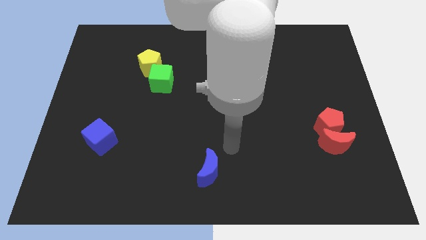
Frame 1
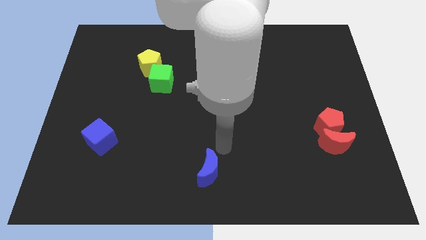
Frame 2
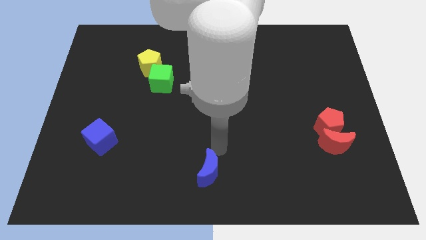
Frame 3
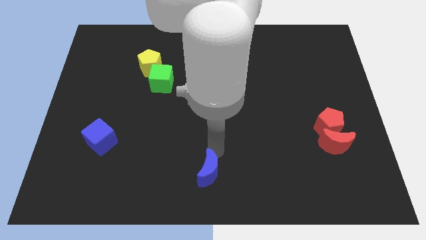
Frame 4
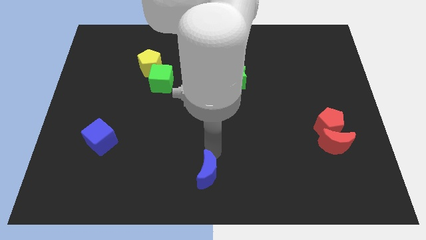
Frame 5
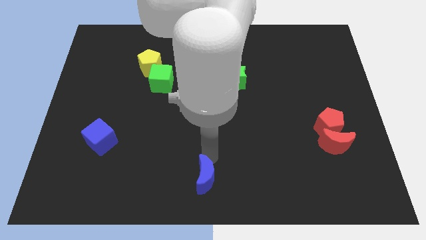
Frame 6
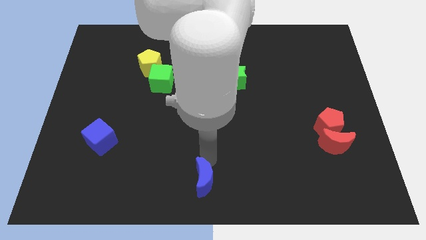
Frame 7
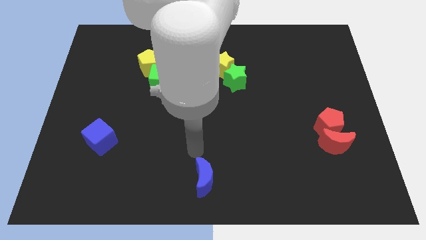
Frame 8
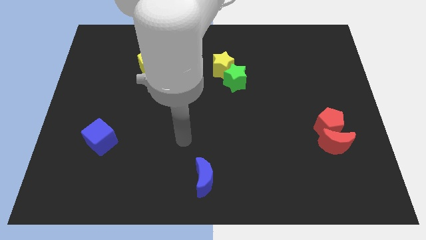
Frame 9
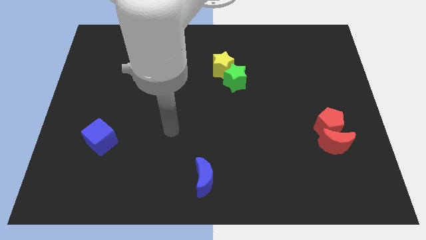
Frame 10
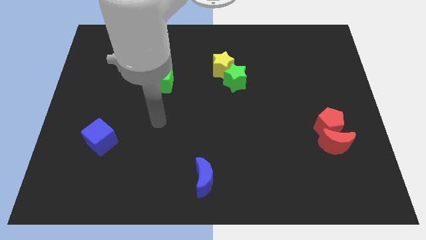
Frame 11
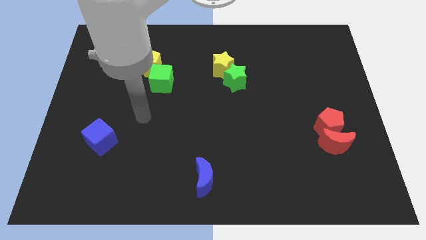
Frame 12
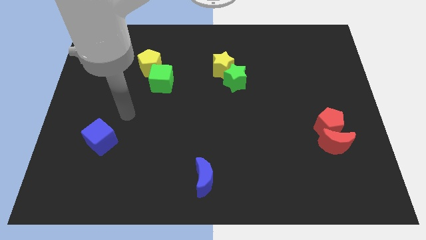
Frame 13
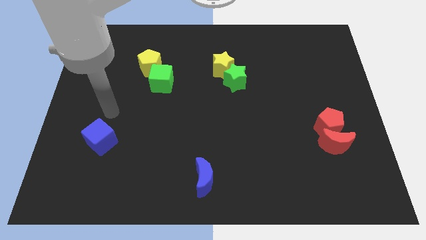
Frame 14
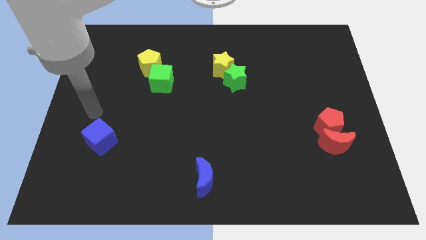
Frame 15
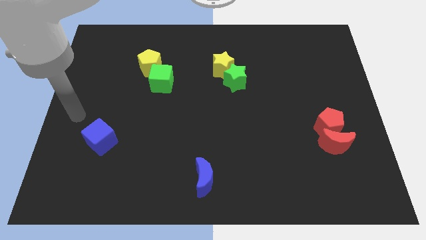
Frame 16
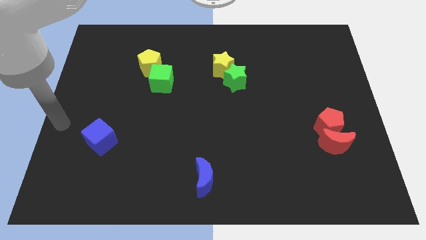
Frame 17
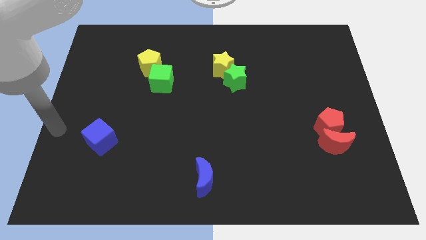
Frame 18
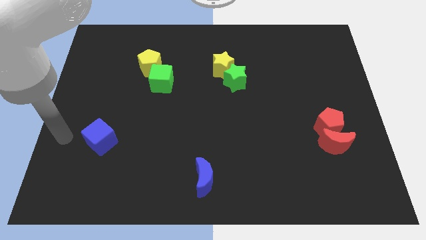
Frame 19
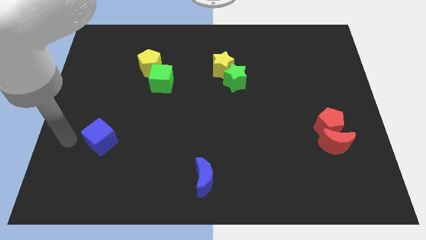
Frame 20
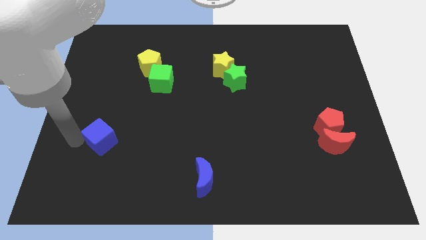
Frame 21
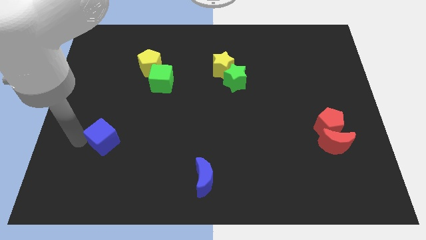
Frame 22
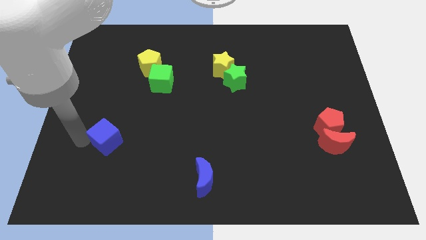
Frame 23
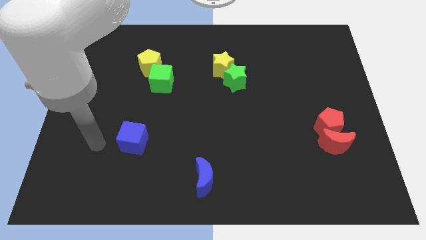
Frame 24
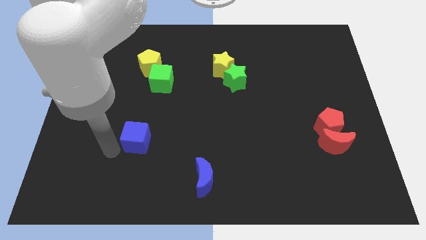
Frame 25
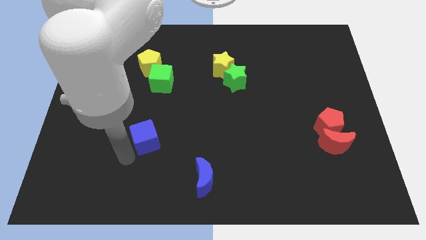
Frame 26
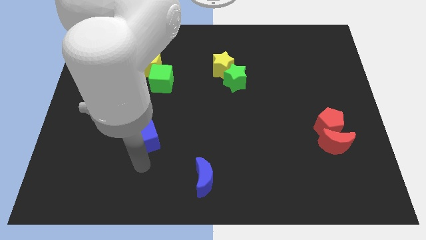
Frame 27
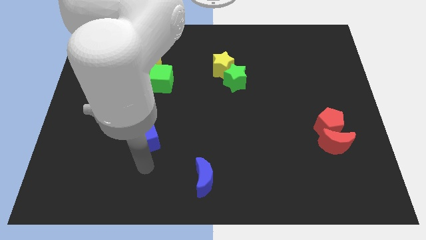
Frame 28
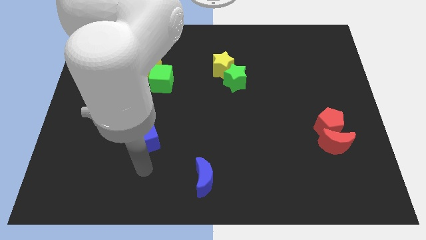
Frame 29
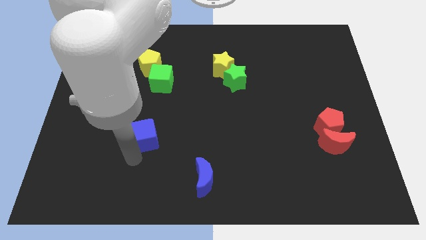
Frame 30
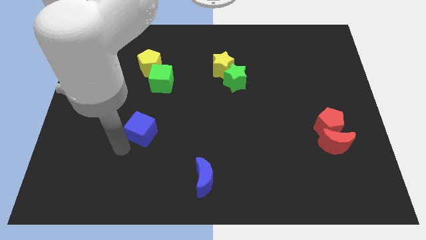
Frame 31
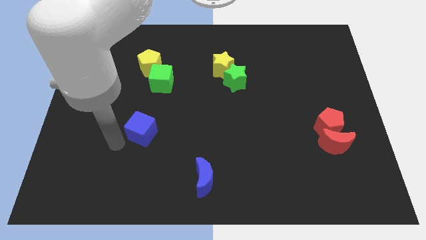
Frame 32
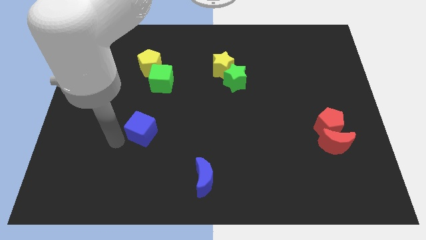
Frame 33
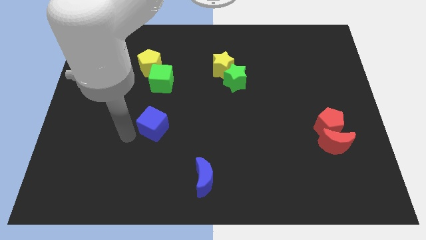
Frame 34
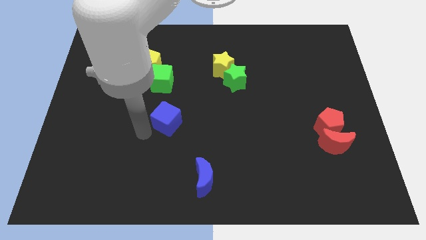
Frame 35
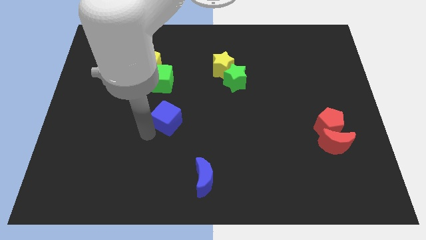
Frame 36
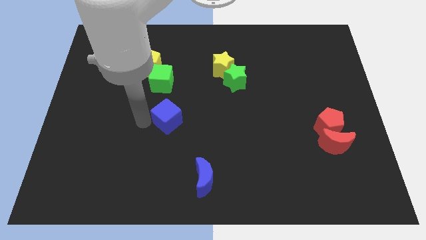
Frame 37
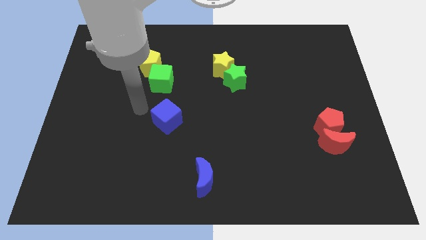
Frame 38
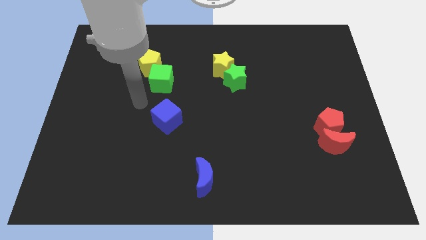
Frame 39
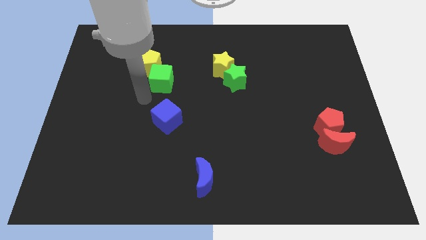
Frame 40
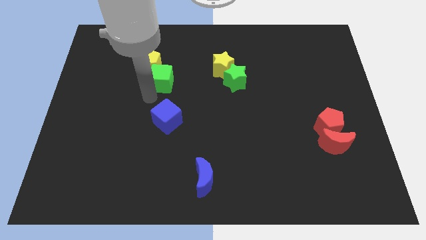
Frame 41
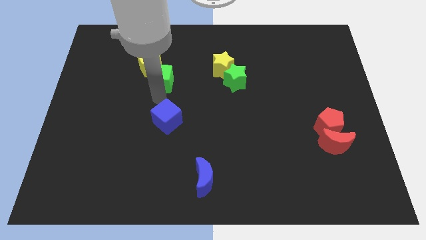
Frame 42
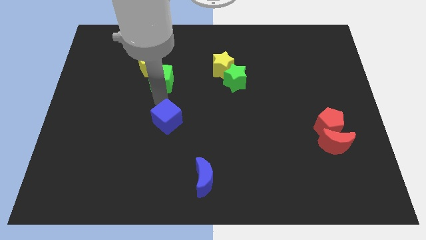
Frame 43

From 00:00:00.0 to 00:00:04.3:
place the blue cube in between green cube and blue crescent

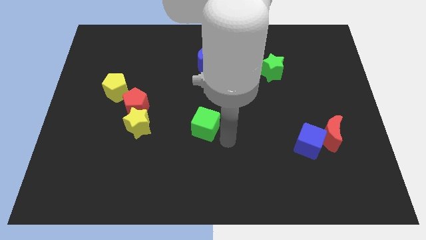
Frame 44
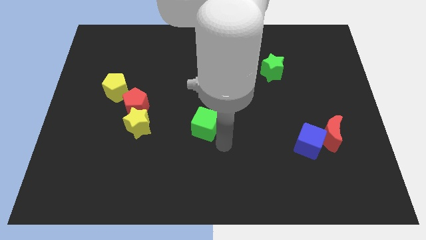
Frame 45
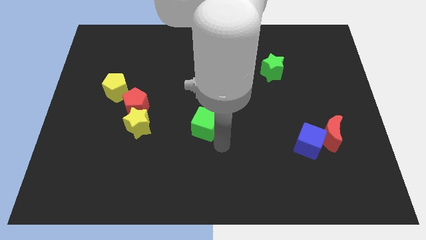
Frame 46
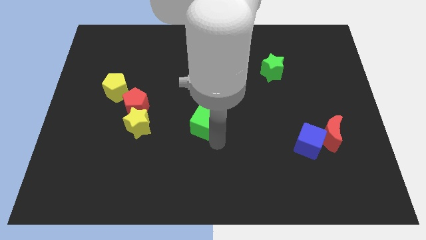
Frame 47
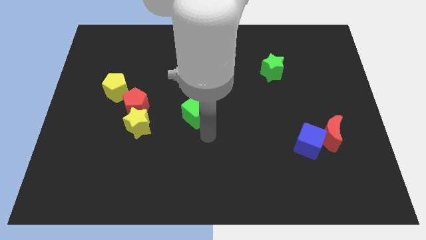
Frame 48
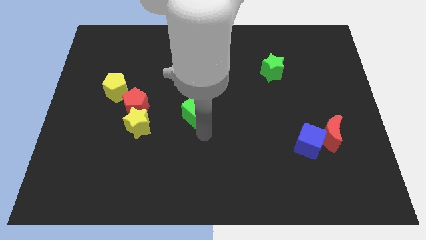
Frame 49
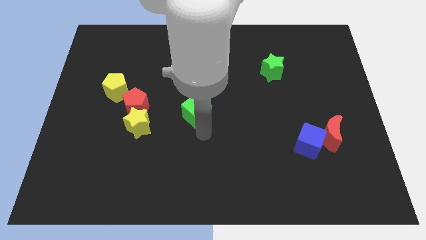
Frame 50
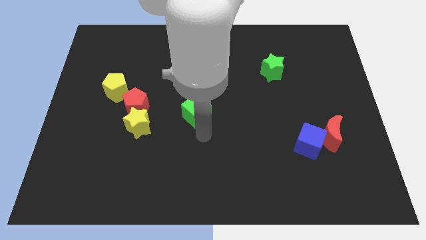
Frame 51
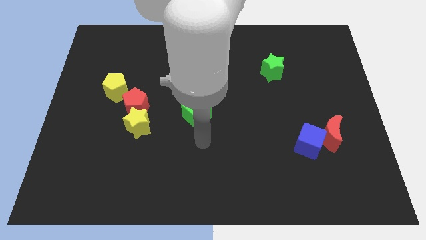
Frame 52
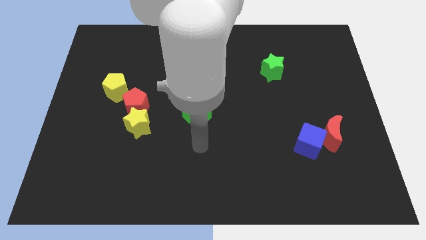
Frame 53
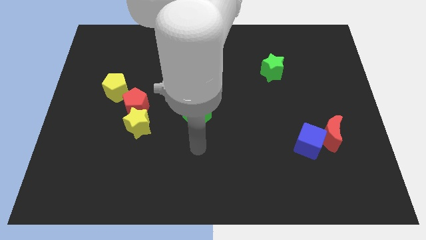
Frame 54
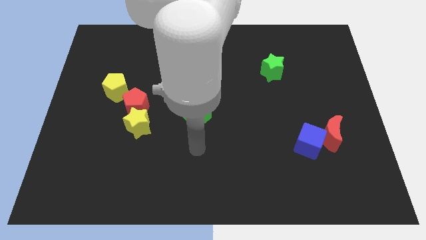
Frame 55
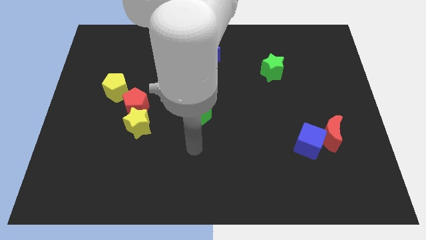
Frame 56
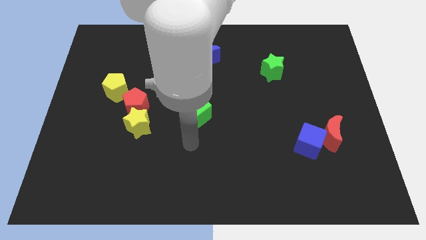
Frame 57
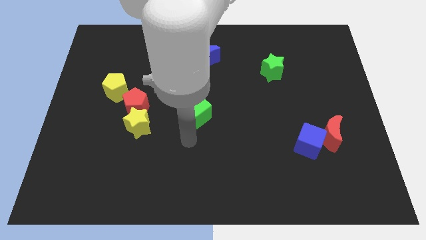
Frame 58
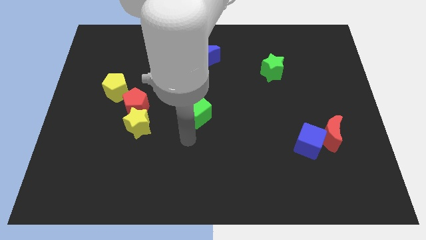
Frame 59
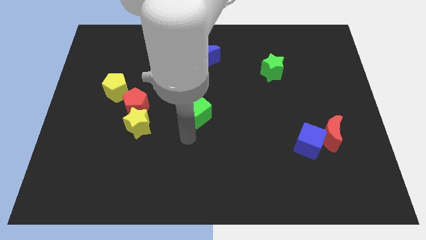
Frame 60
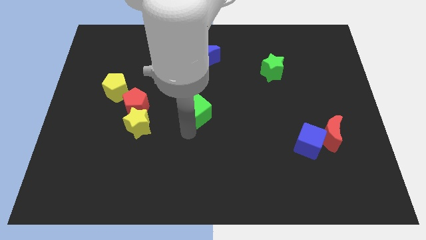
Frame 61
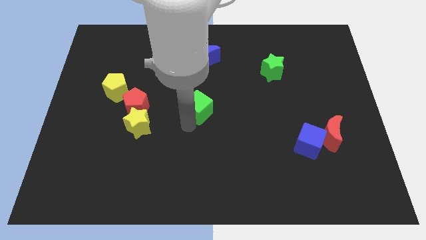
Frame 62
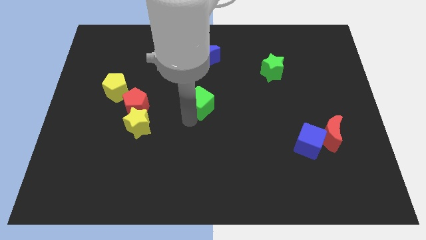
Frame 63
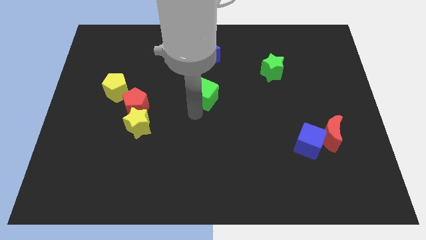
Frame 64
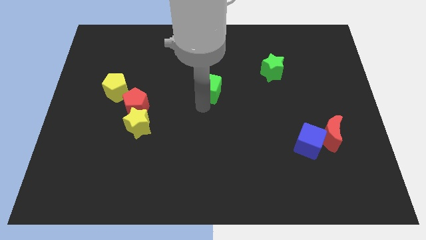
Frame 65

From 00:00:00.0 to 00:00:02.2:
push the green cube at the center of the board

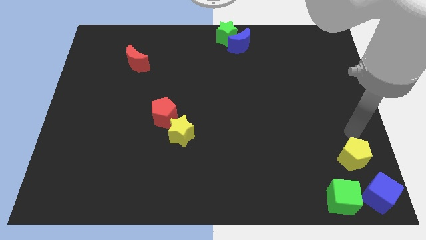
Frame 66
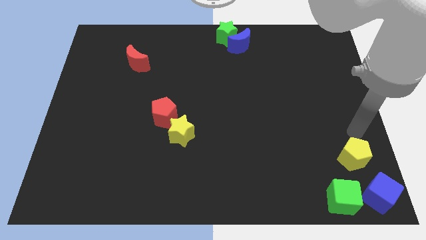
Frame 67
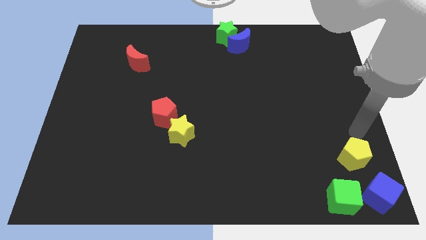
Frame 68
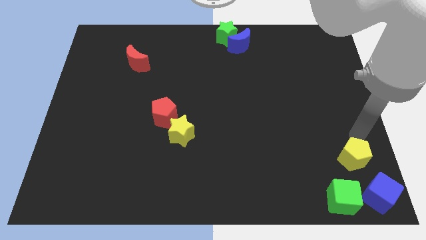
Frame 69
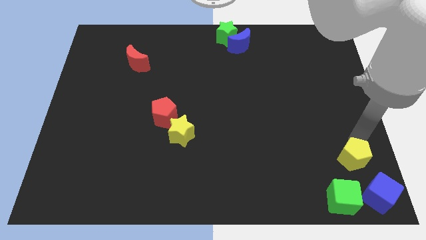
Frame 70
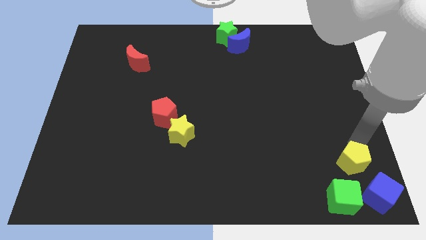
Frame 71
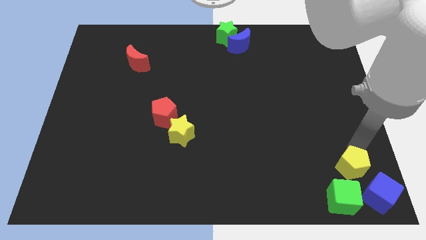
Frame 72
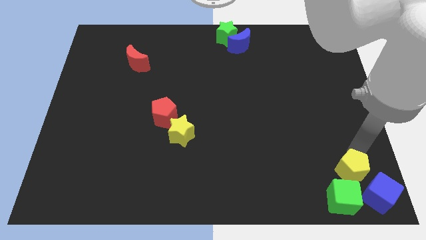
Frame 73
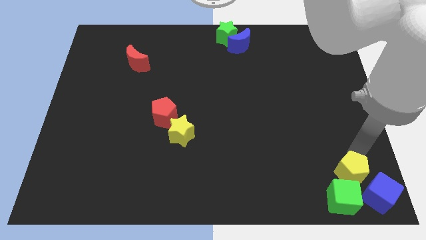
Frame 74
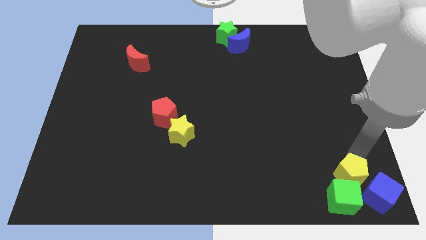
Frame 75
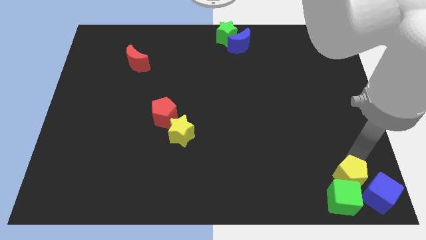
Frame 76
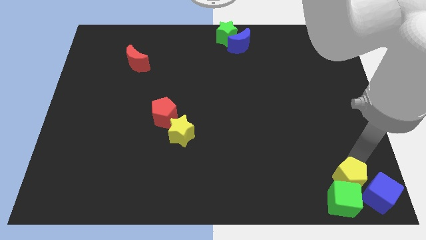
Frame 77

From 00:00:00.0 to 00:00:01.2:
move the yellow pentagon to the top of the green cube

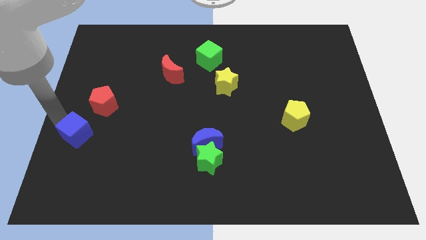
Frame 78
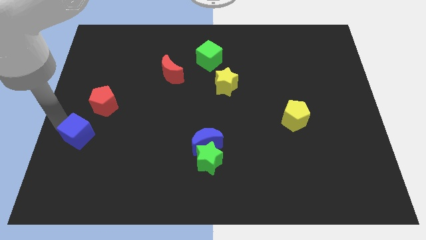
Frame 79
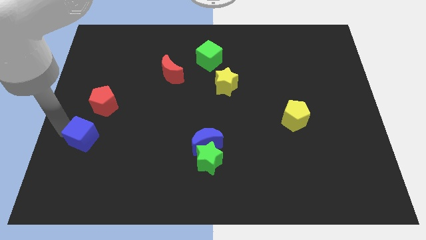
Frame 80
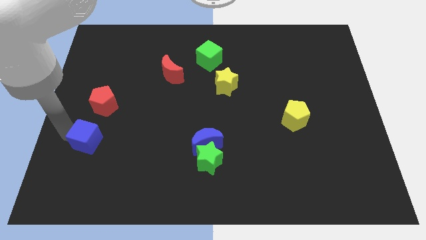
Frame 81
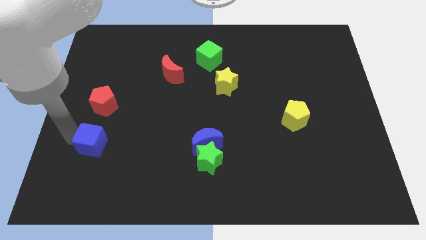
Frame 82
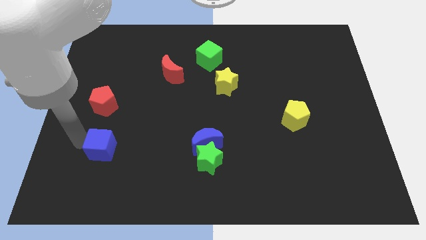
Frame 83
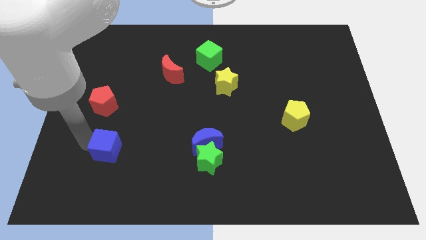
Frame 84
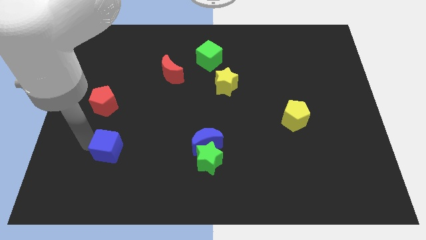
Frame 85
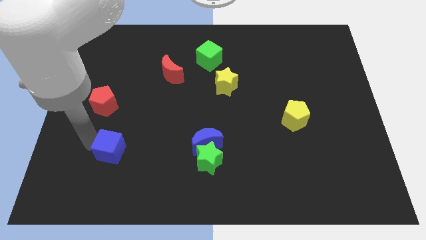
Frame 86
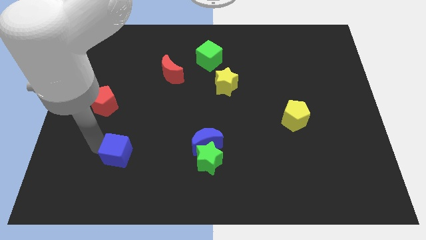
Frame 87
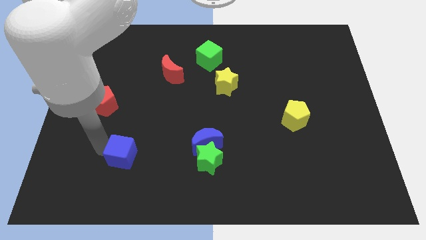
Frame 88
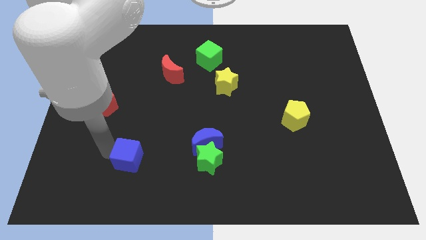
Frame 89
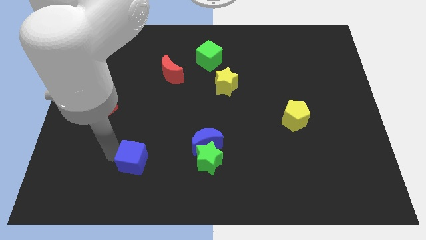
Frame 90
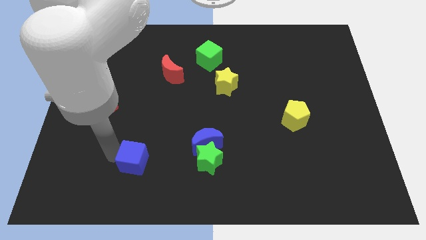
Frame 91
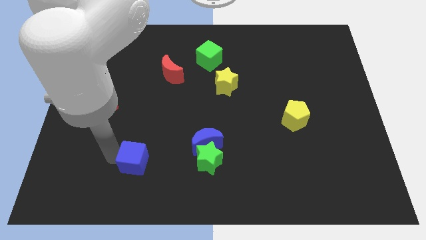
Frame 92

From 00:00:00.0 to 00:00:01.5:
push the blue cube towards the right
